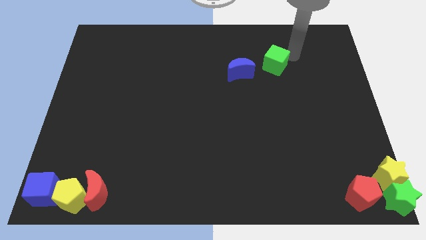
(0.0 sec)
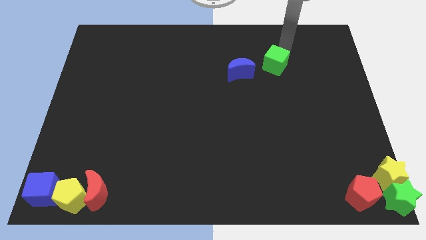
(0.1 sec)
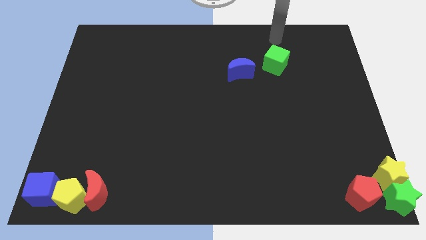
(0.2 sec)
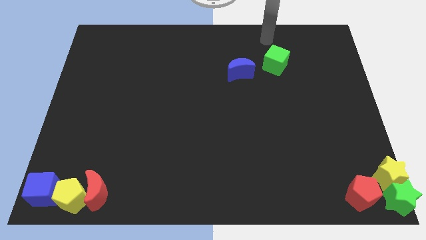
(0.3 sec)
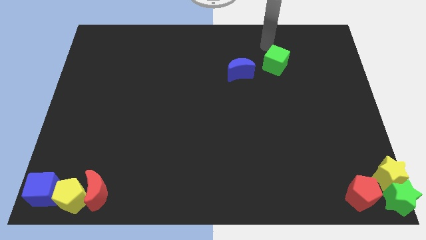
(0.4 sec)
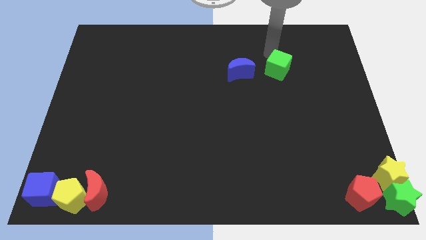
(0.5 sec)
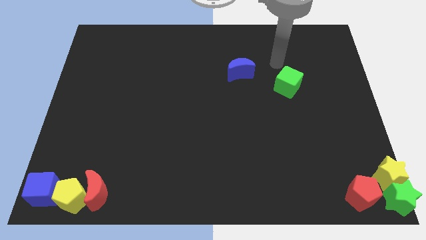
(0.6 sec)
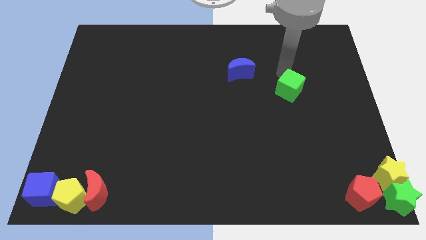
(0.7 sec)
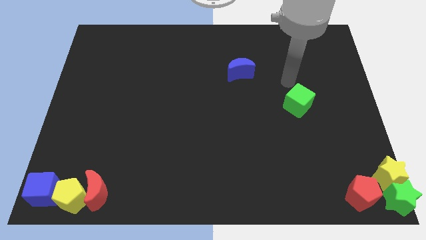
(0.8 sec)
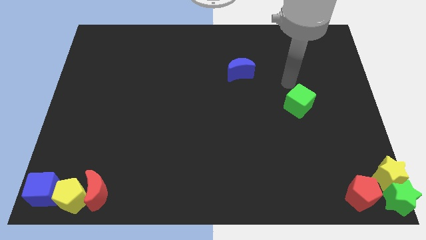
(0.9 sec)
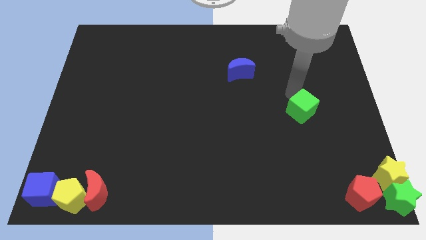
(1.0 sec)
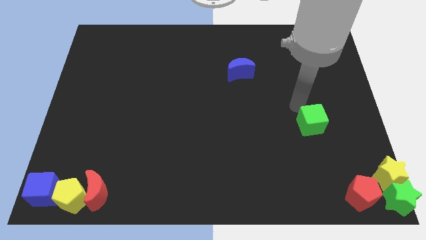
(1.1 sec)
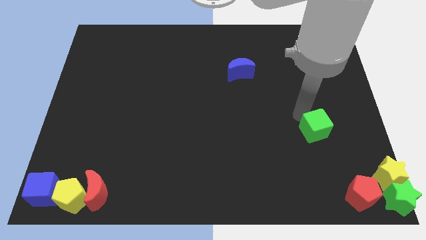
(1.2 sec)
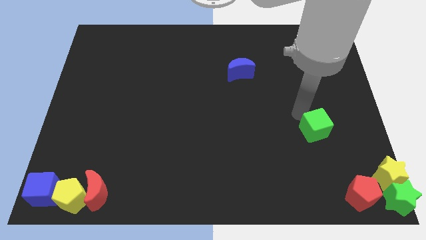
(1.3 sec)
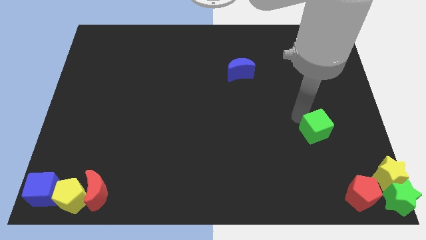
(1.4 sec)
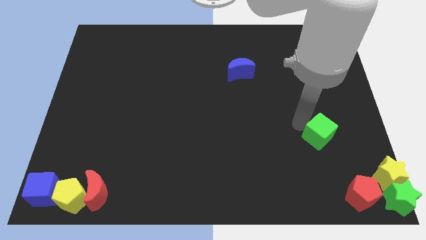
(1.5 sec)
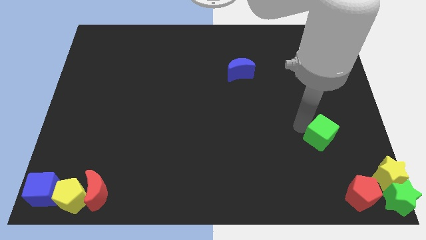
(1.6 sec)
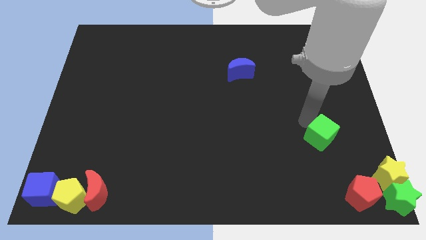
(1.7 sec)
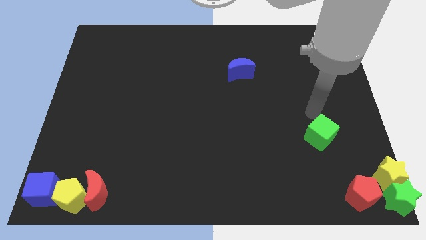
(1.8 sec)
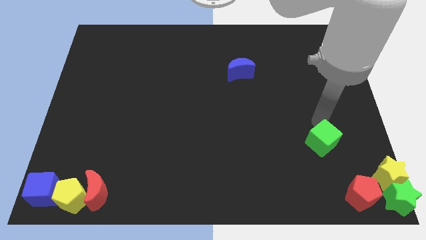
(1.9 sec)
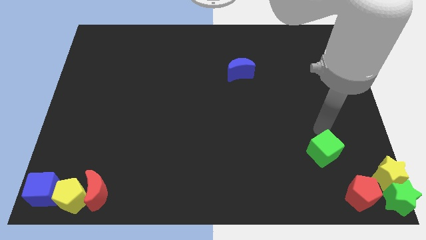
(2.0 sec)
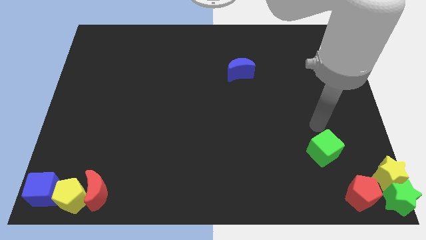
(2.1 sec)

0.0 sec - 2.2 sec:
push the green cube towards the bottom right

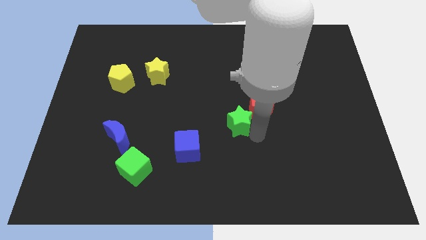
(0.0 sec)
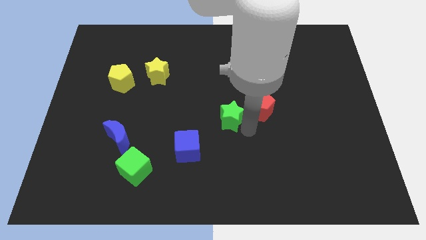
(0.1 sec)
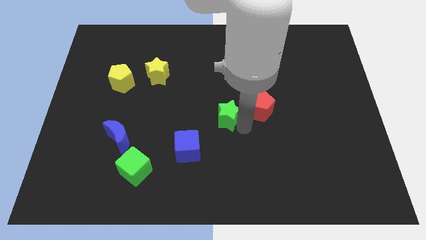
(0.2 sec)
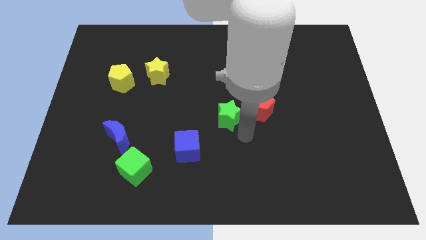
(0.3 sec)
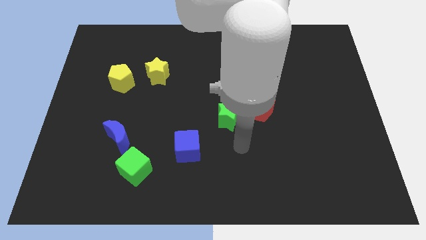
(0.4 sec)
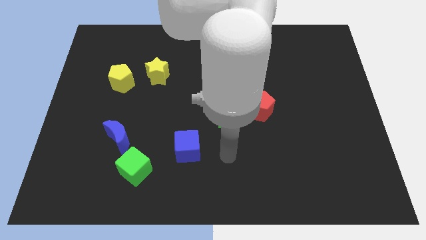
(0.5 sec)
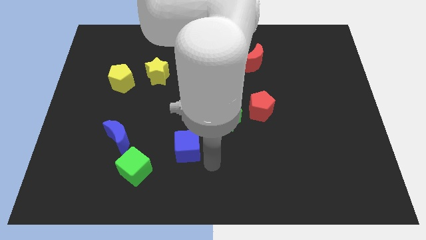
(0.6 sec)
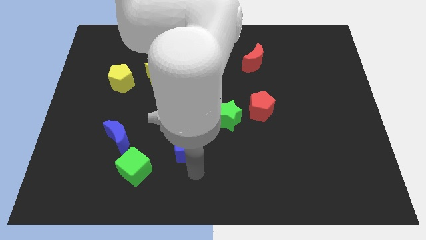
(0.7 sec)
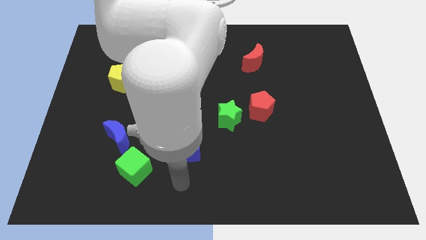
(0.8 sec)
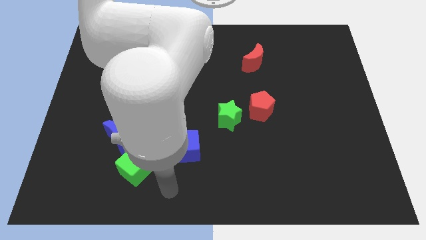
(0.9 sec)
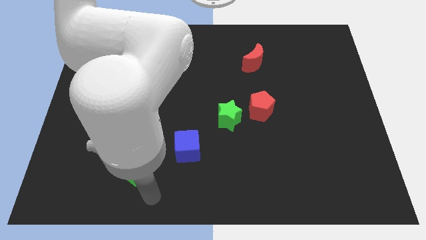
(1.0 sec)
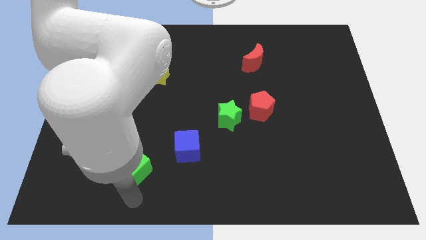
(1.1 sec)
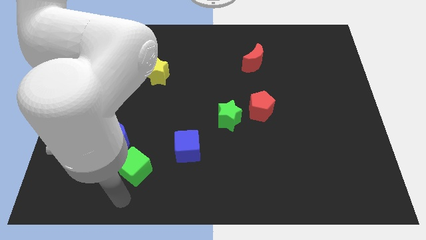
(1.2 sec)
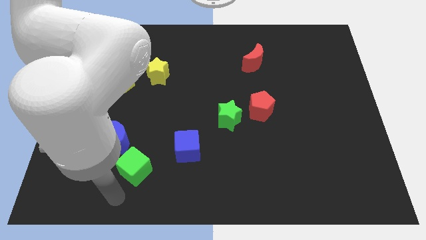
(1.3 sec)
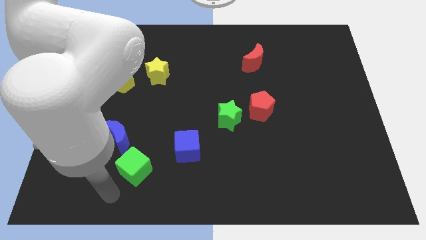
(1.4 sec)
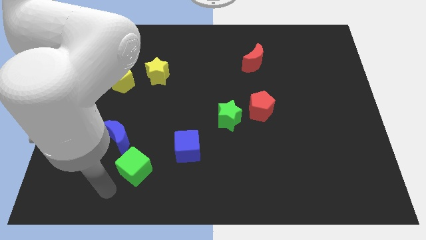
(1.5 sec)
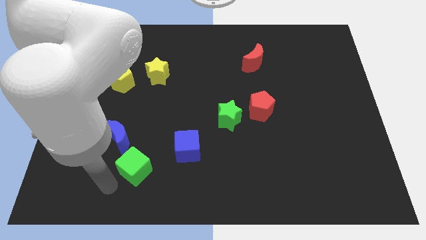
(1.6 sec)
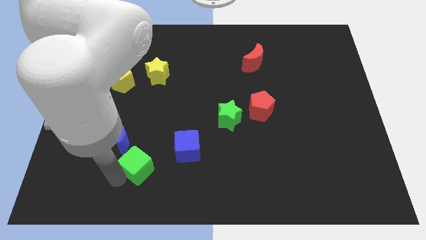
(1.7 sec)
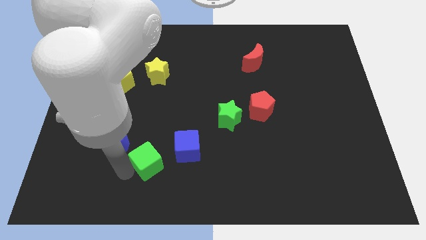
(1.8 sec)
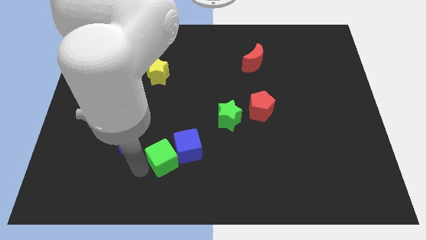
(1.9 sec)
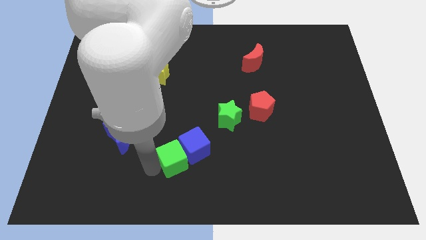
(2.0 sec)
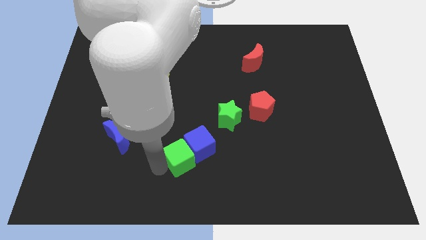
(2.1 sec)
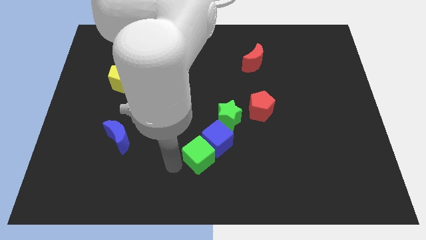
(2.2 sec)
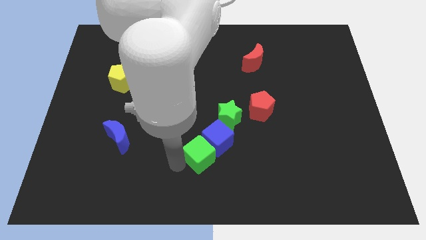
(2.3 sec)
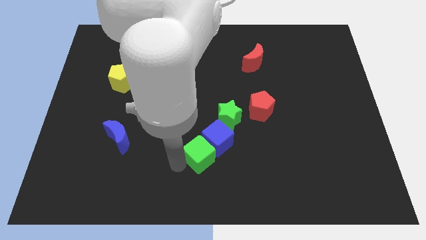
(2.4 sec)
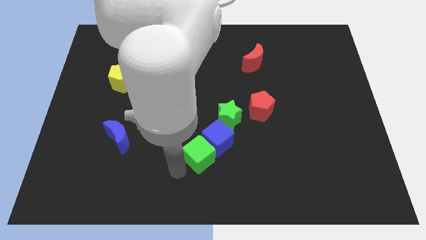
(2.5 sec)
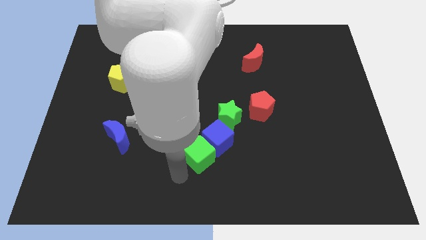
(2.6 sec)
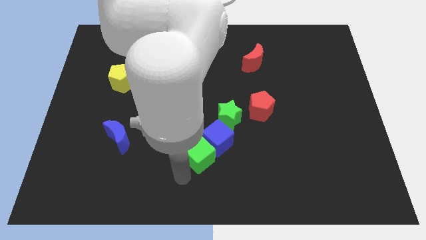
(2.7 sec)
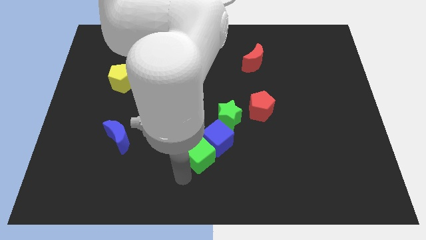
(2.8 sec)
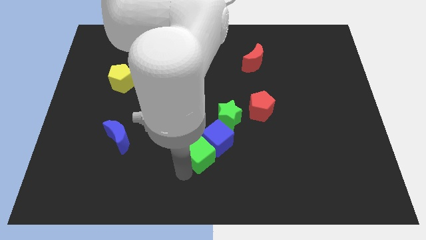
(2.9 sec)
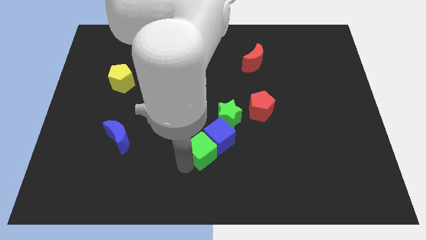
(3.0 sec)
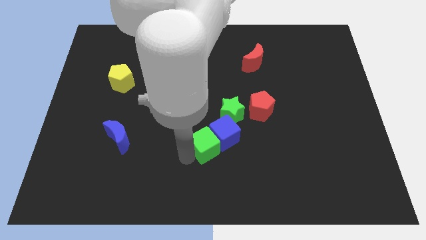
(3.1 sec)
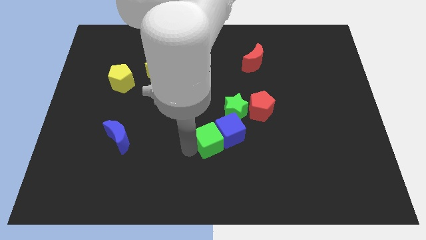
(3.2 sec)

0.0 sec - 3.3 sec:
push the cubes and the green star to the left side of the red pentagon

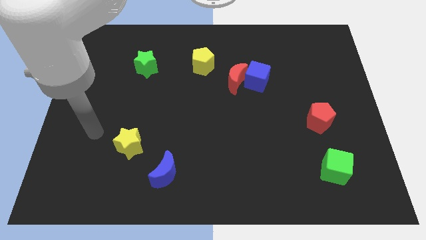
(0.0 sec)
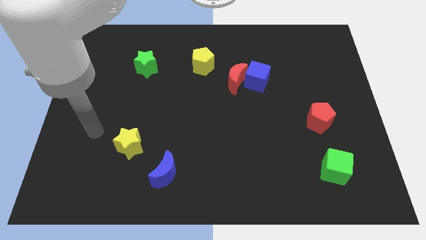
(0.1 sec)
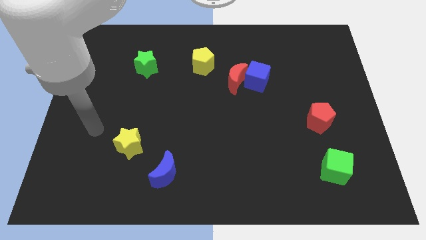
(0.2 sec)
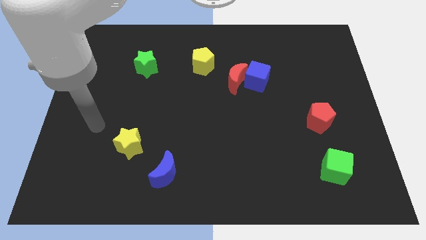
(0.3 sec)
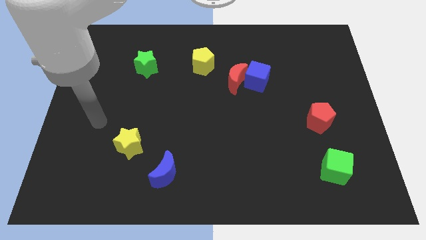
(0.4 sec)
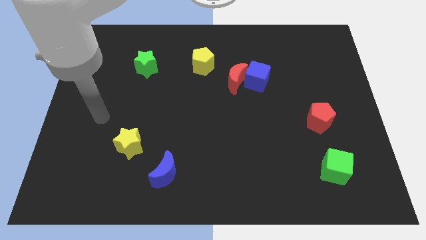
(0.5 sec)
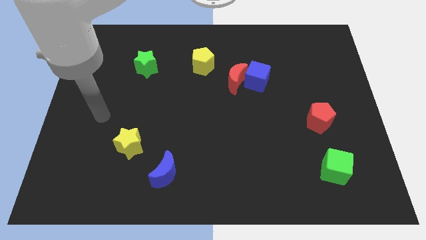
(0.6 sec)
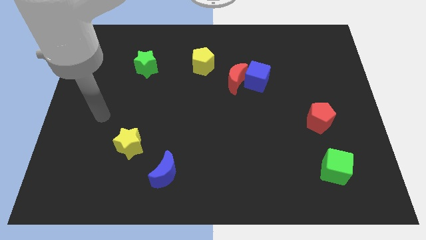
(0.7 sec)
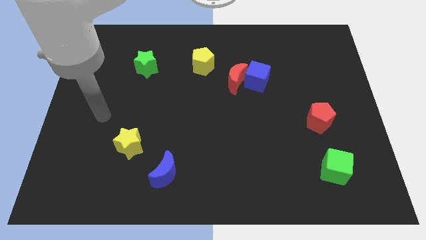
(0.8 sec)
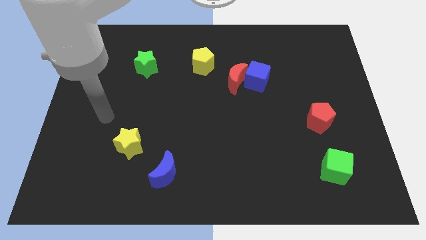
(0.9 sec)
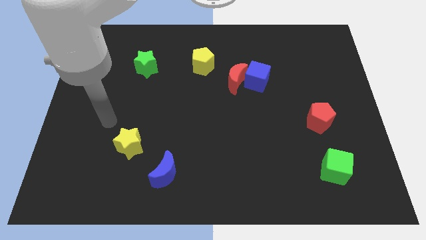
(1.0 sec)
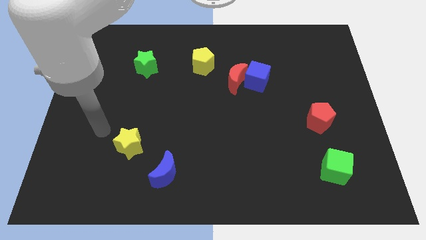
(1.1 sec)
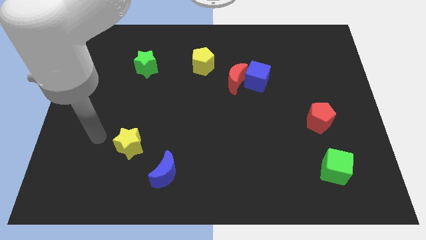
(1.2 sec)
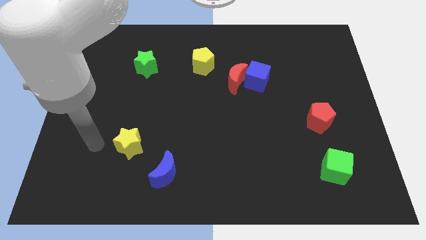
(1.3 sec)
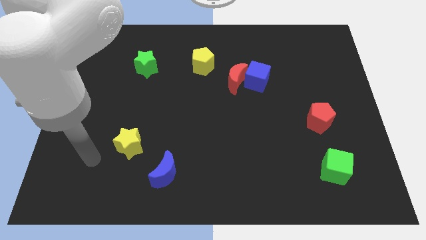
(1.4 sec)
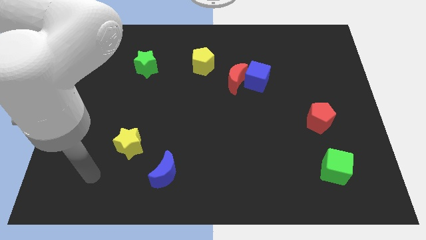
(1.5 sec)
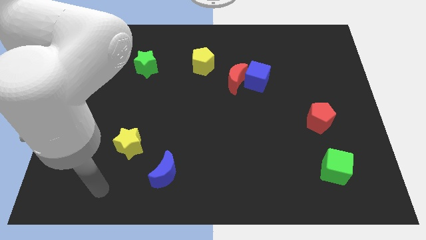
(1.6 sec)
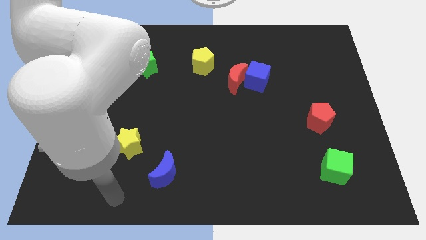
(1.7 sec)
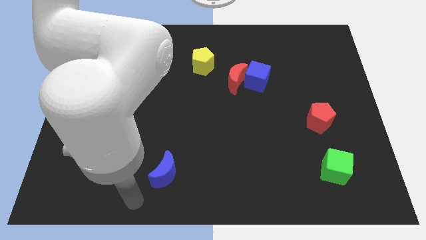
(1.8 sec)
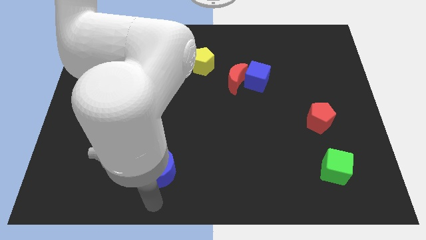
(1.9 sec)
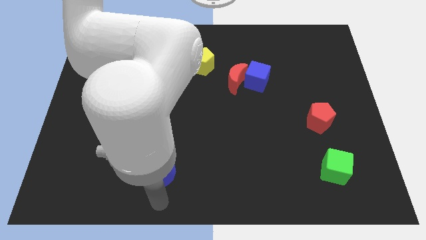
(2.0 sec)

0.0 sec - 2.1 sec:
move your arm below the blue crescent

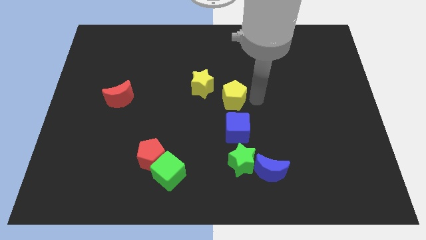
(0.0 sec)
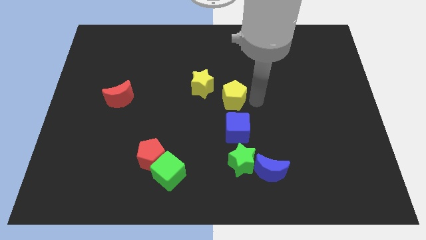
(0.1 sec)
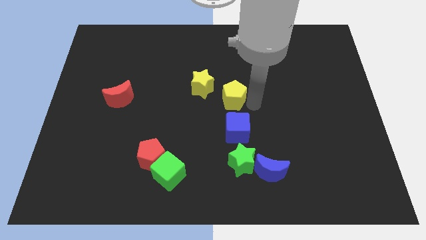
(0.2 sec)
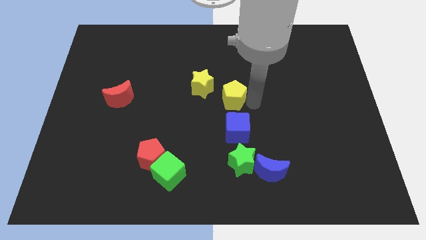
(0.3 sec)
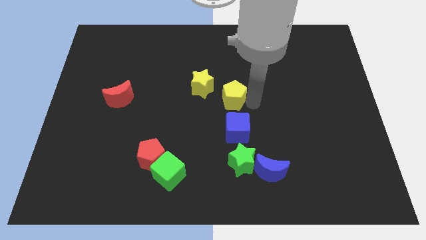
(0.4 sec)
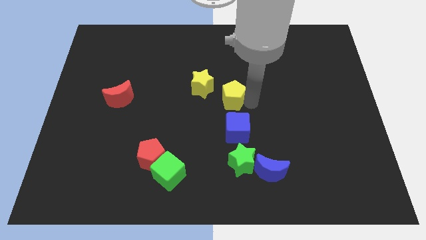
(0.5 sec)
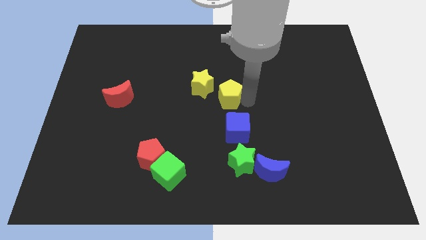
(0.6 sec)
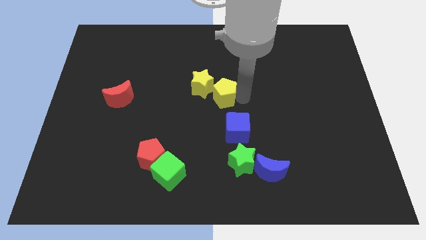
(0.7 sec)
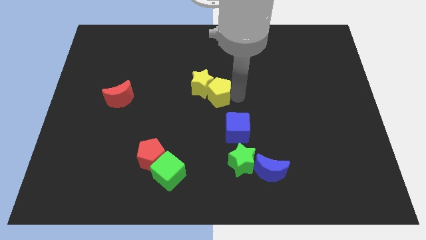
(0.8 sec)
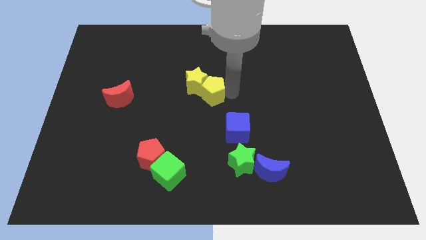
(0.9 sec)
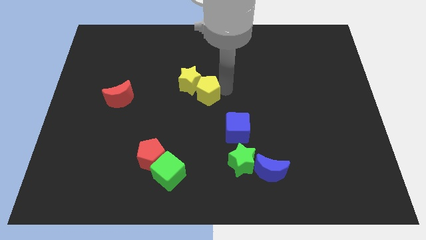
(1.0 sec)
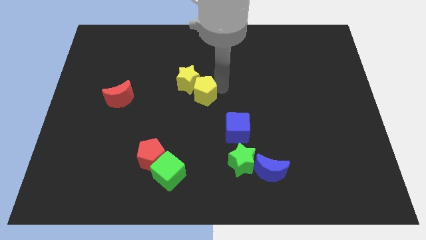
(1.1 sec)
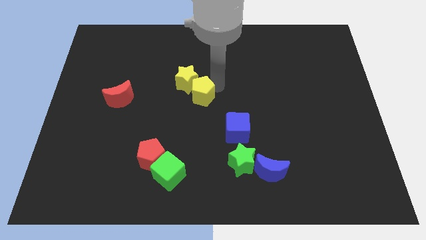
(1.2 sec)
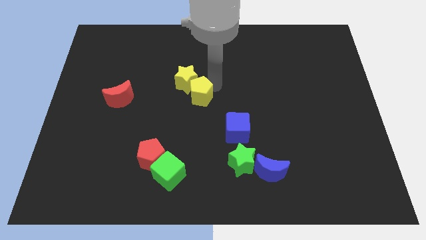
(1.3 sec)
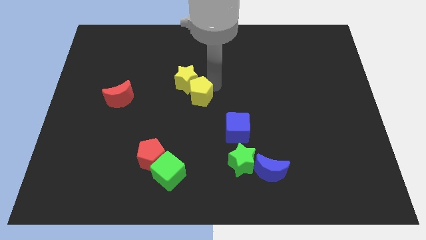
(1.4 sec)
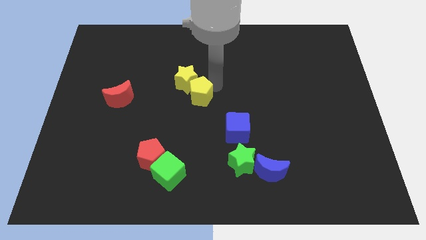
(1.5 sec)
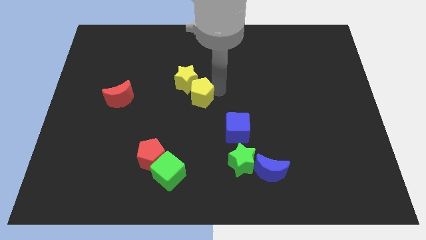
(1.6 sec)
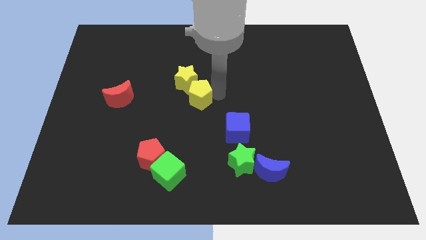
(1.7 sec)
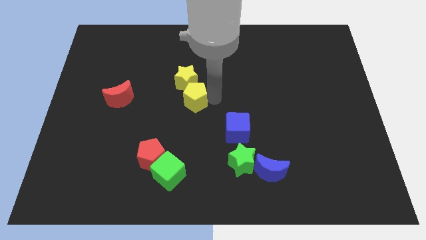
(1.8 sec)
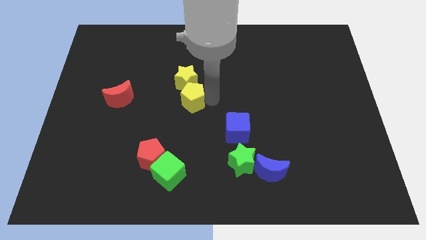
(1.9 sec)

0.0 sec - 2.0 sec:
push yellow pentagon below yellow star
